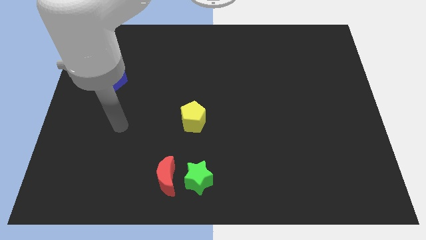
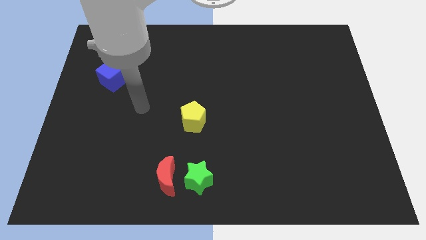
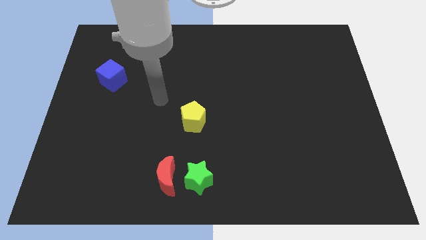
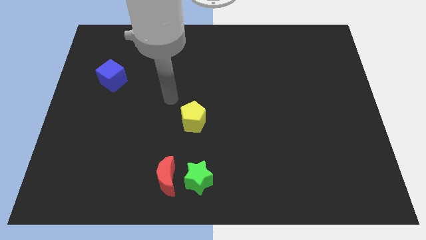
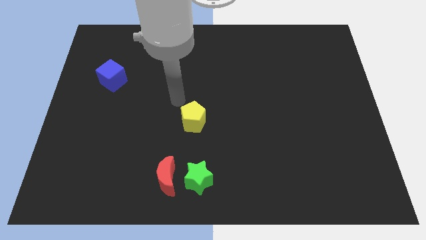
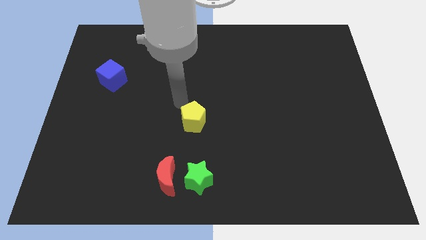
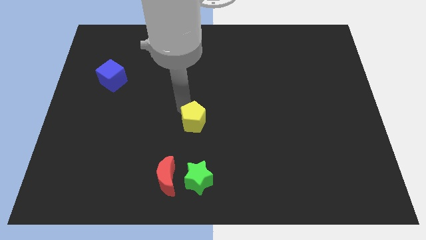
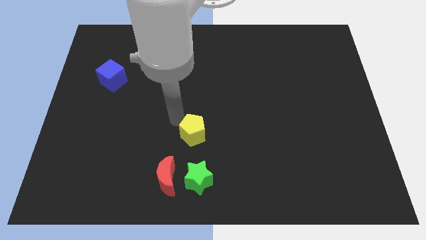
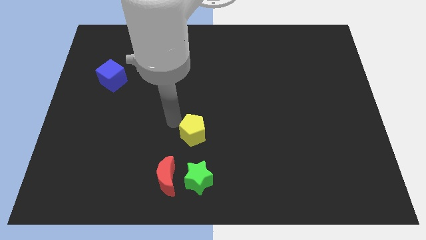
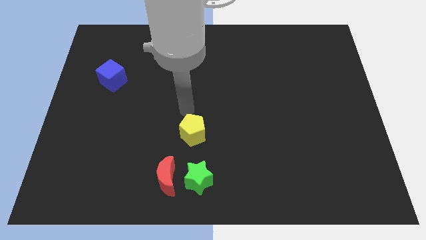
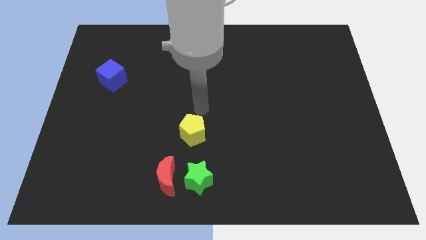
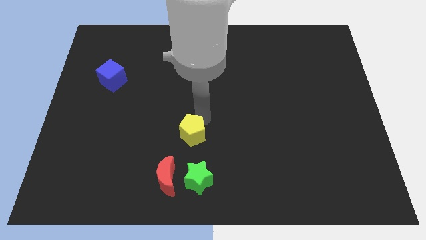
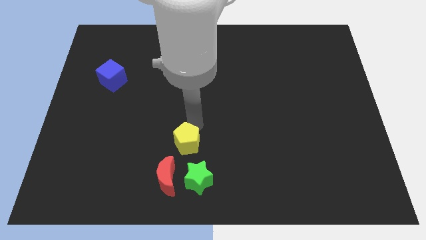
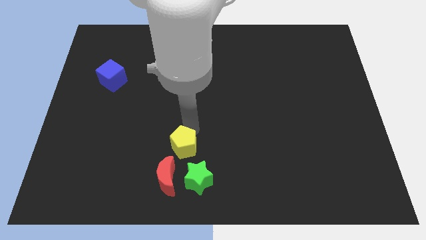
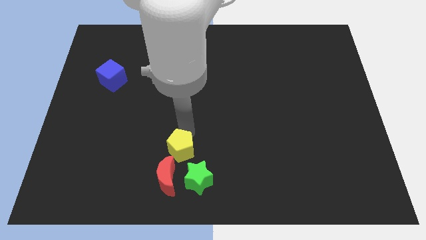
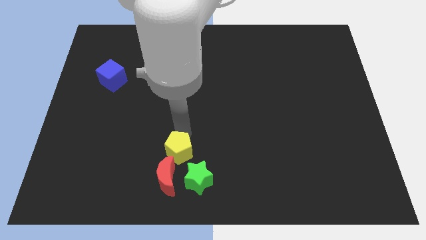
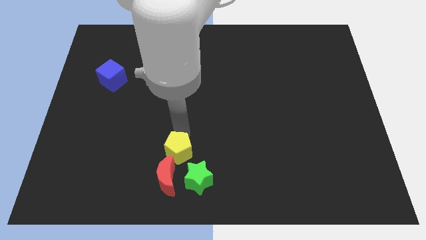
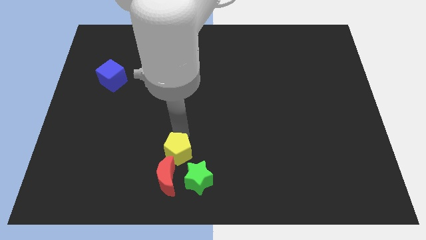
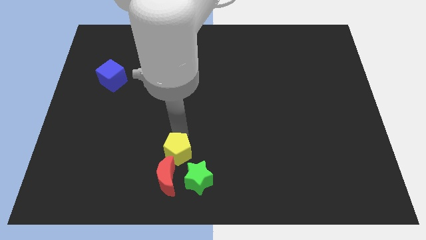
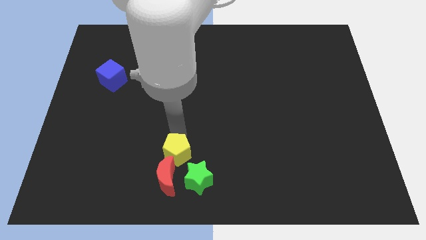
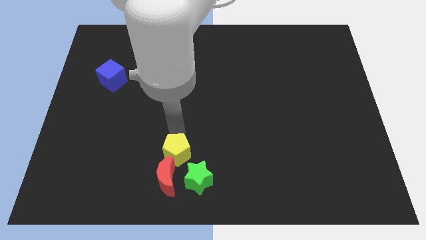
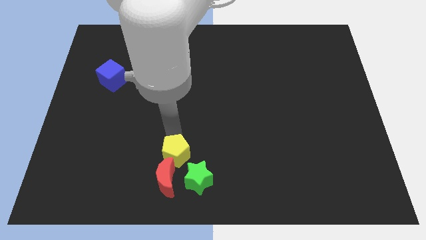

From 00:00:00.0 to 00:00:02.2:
put the pentagon towards the red block

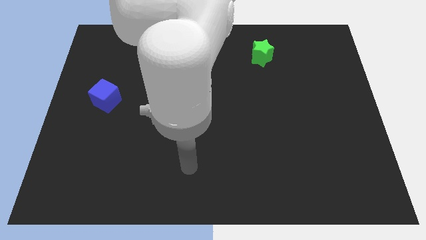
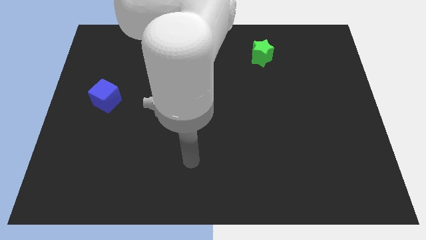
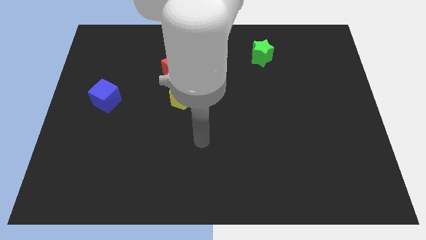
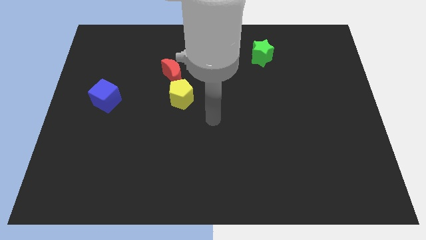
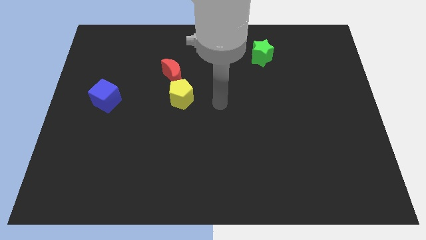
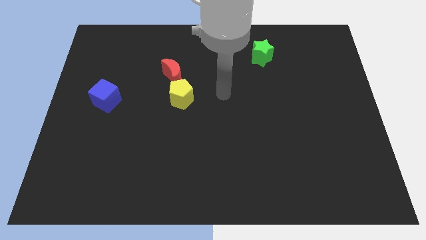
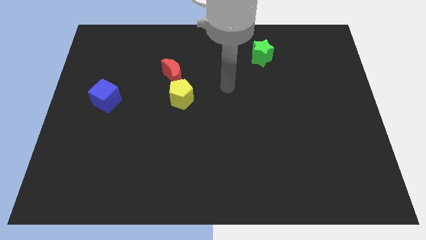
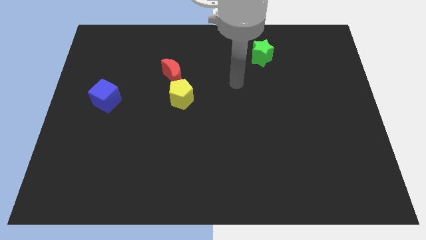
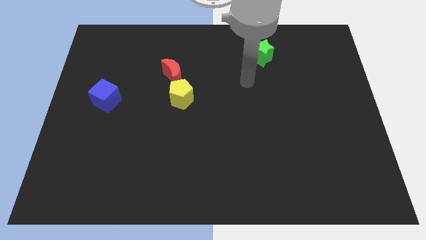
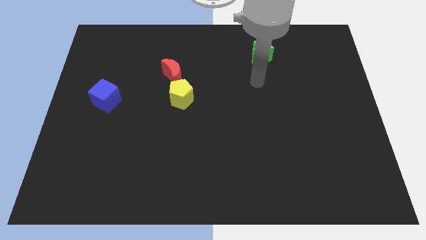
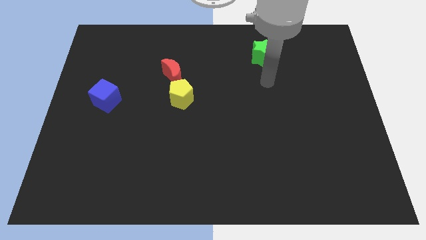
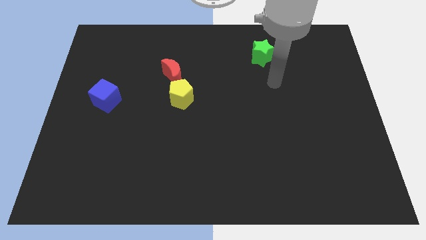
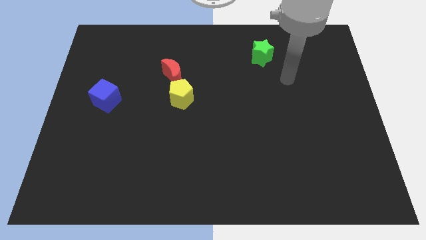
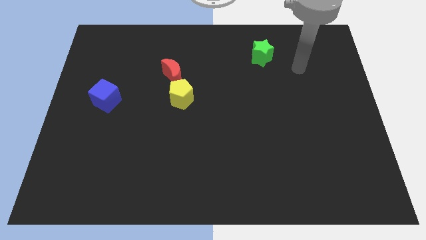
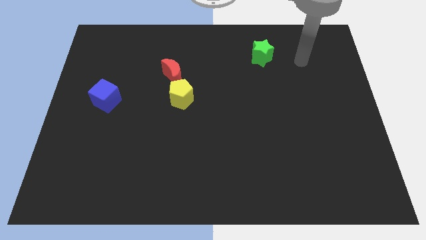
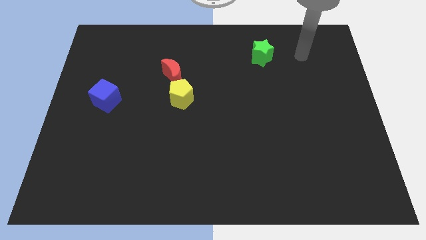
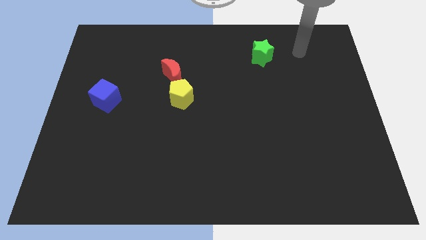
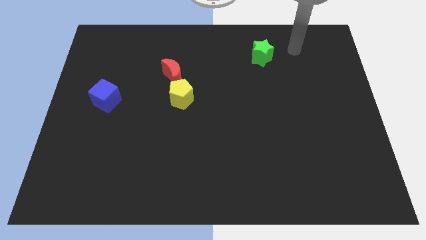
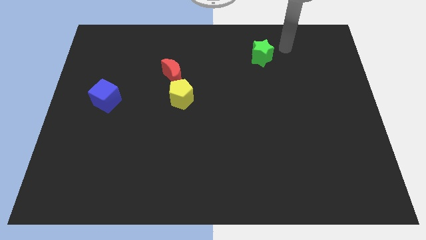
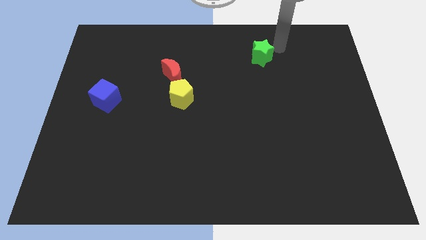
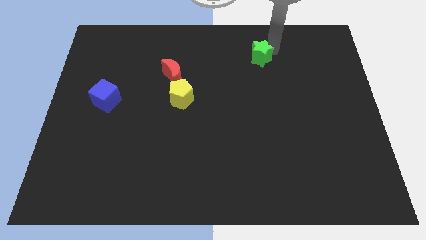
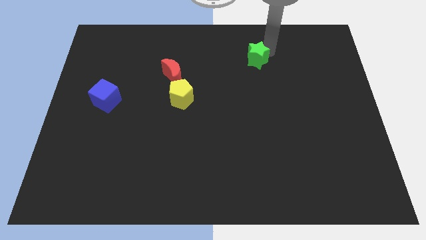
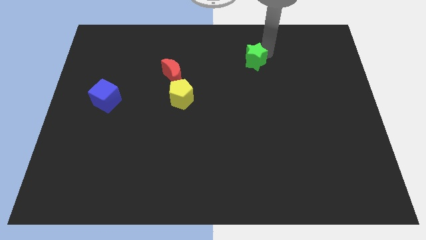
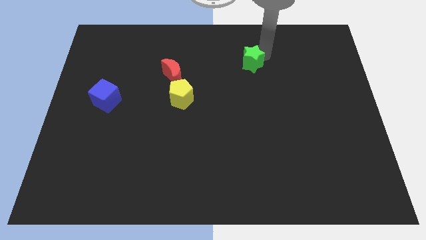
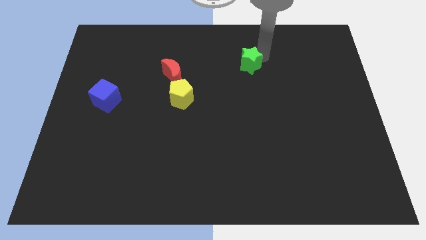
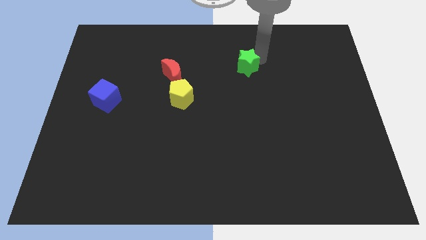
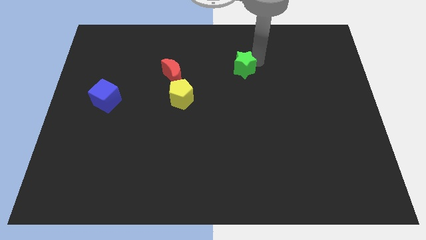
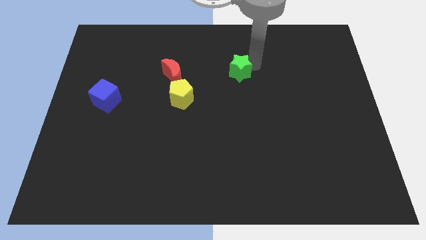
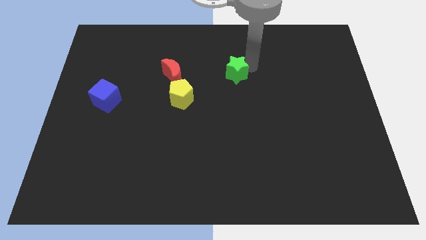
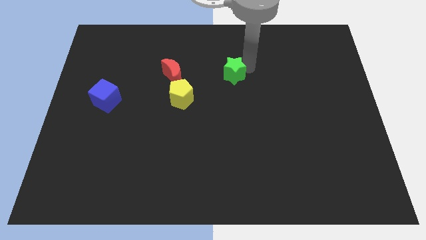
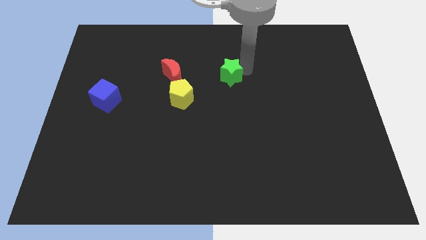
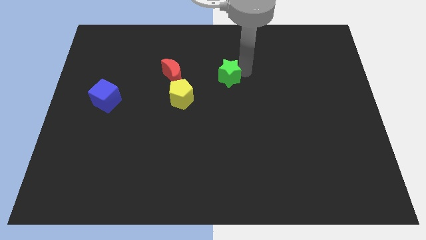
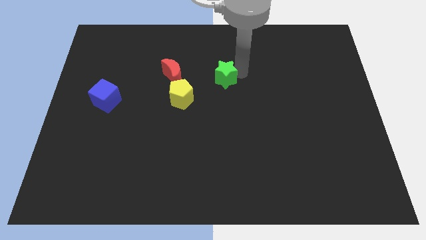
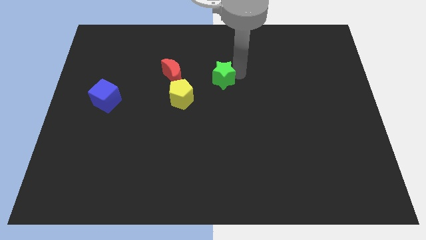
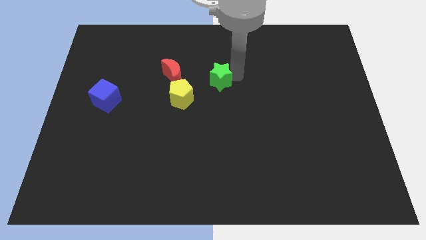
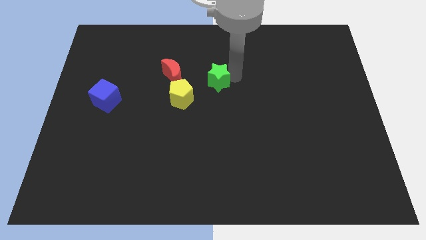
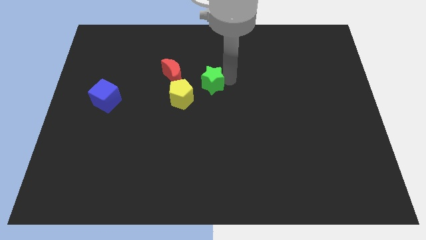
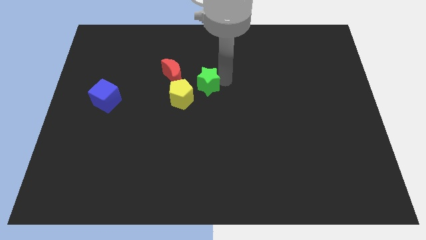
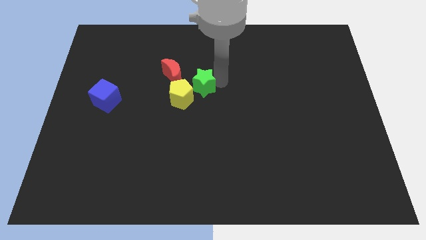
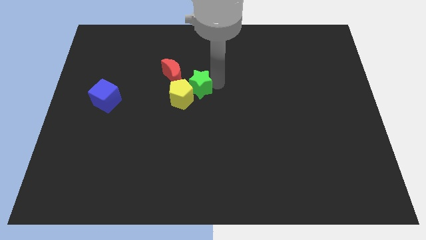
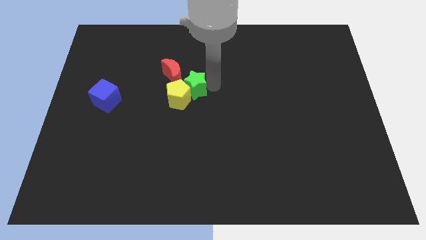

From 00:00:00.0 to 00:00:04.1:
move the green block towards the yellow pentagon

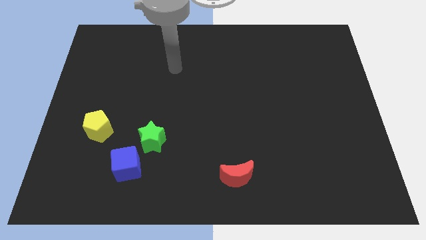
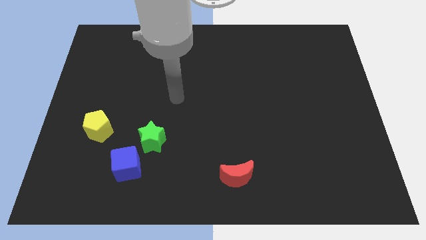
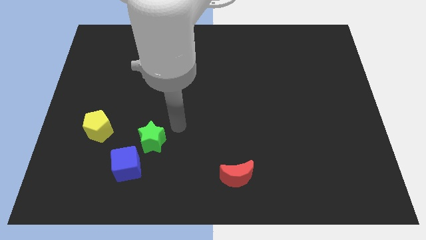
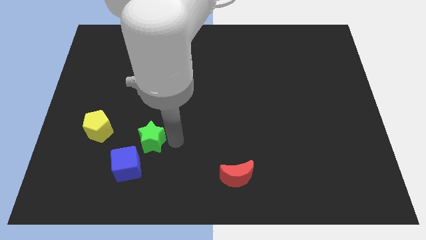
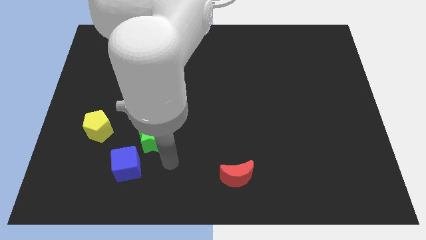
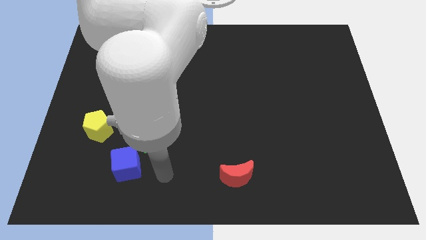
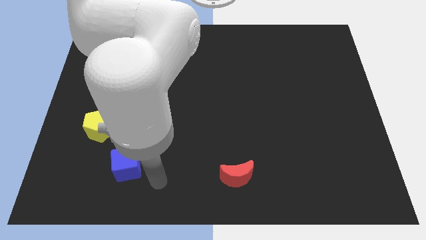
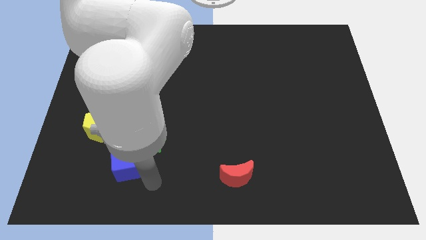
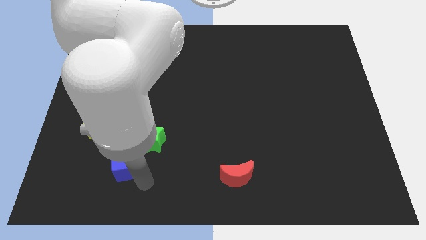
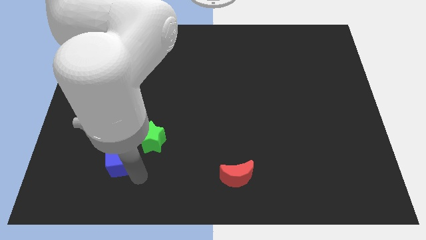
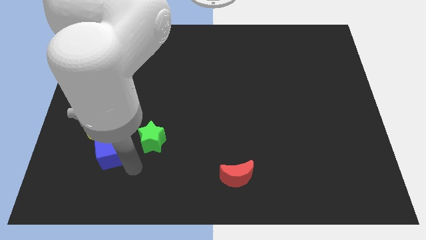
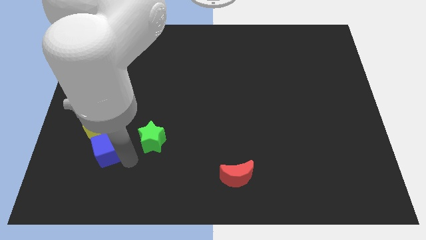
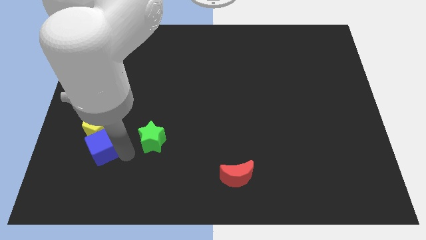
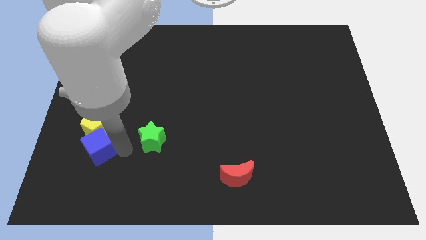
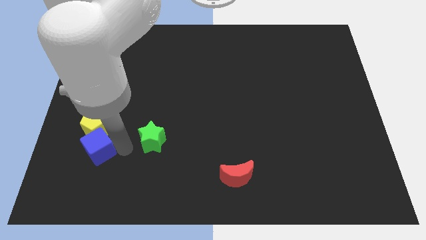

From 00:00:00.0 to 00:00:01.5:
push the cube next to the pentagon

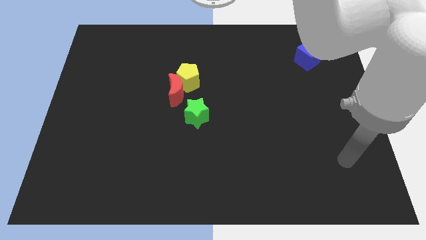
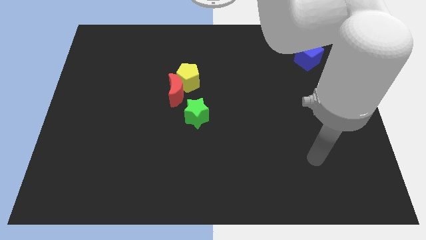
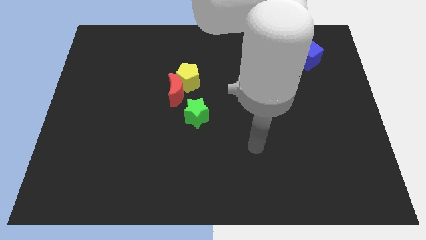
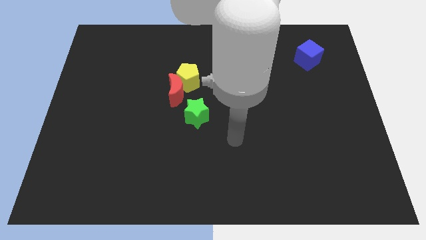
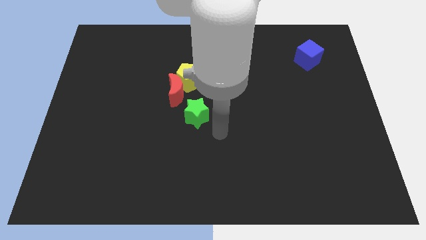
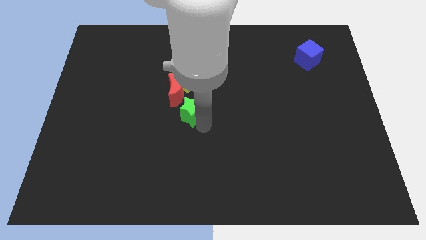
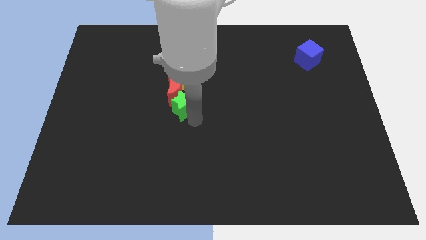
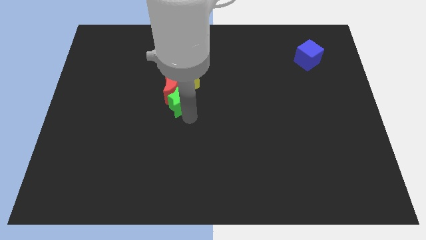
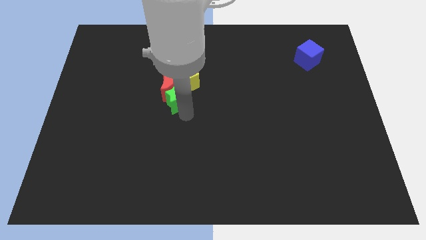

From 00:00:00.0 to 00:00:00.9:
slide the green star towards the red moon
